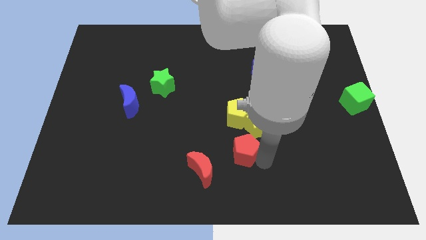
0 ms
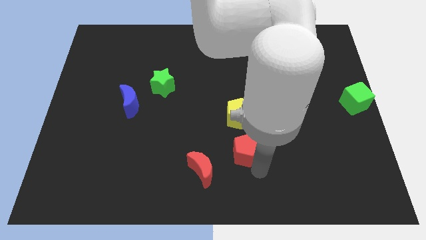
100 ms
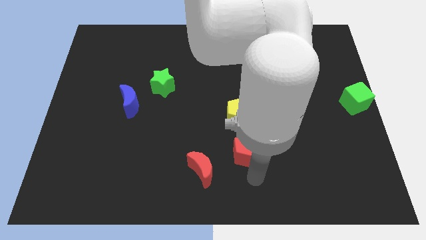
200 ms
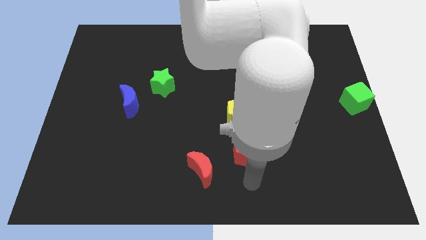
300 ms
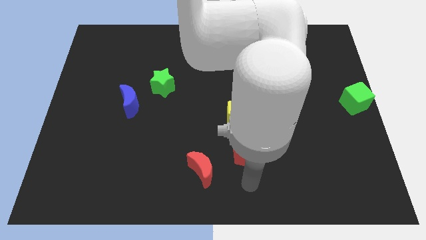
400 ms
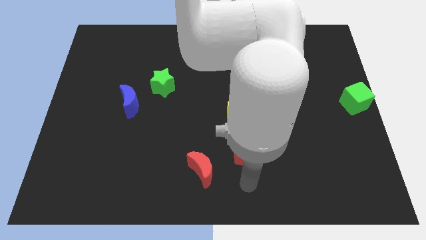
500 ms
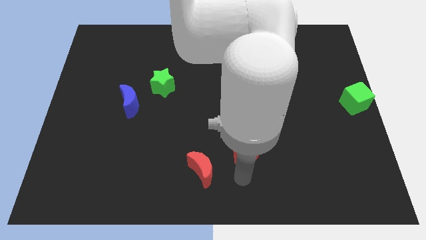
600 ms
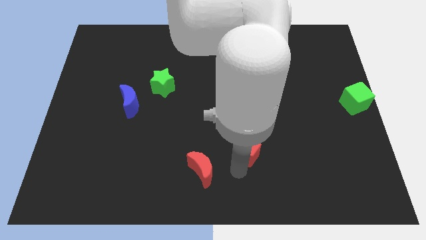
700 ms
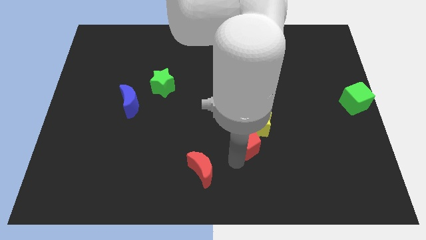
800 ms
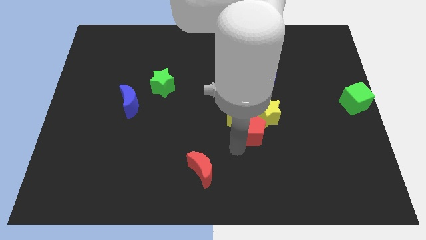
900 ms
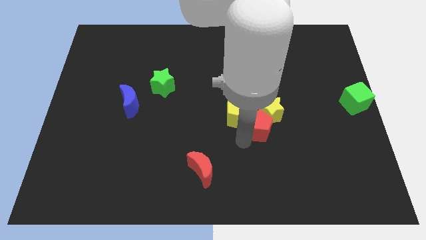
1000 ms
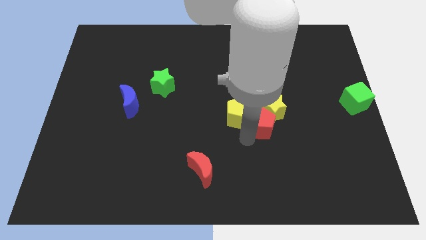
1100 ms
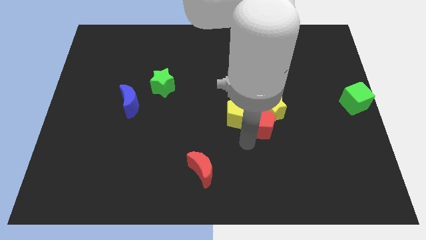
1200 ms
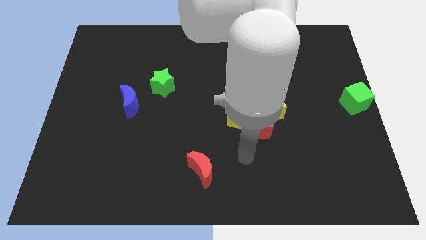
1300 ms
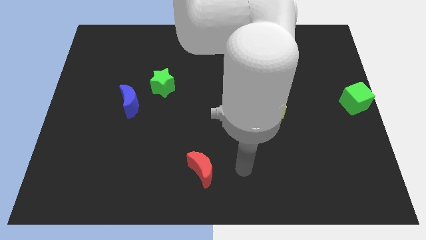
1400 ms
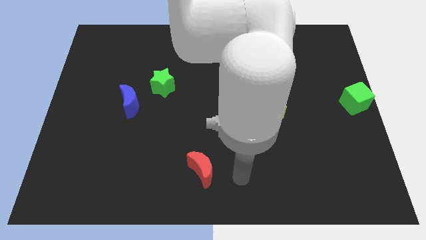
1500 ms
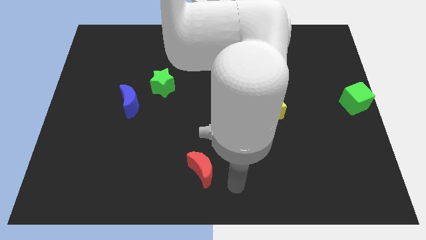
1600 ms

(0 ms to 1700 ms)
slide the red pentagon into the yellow star

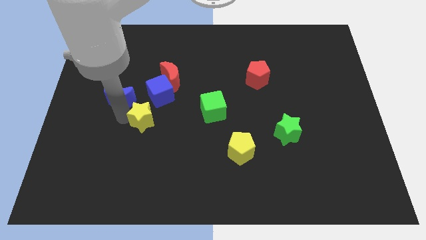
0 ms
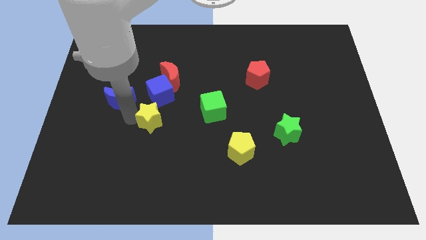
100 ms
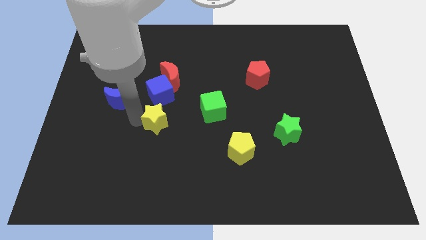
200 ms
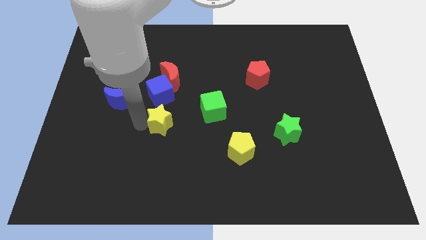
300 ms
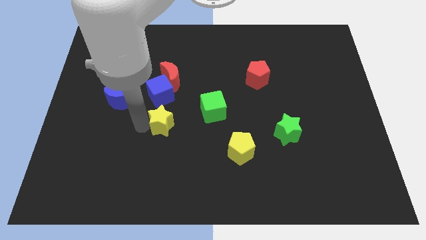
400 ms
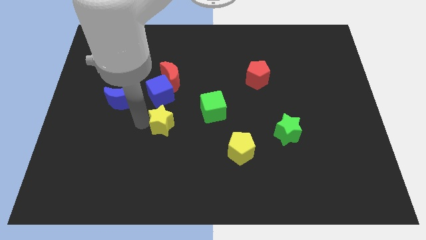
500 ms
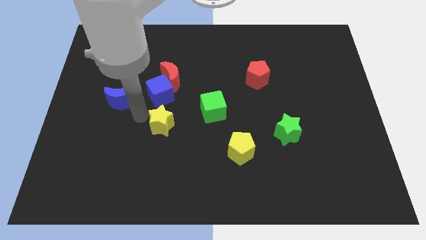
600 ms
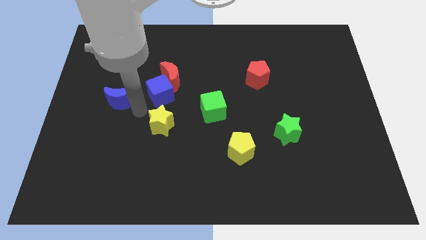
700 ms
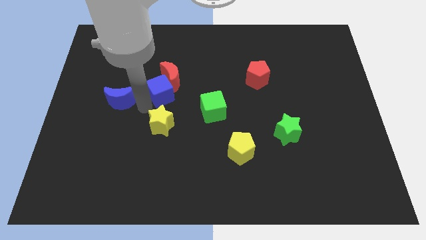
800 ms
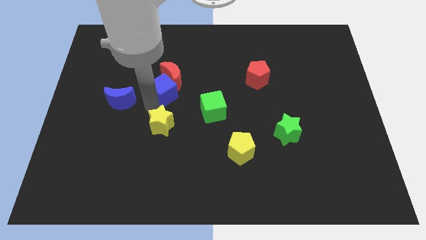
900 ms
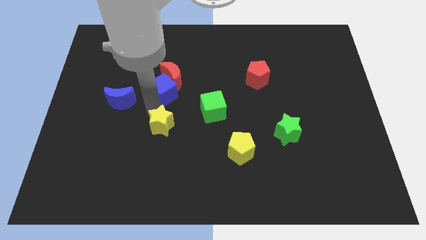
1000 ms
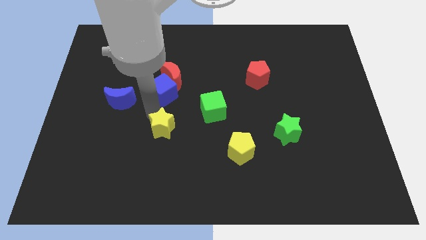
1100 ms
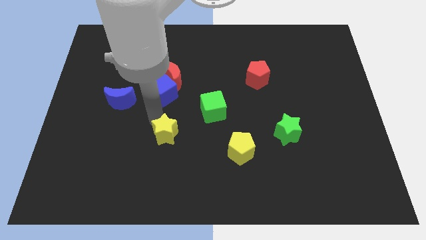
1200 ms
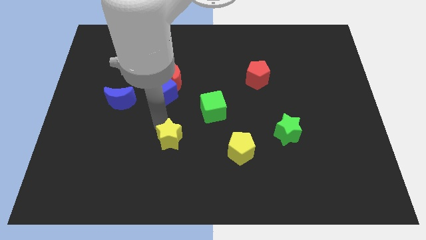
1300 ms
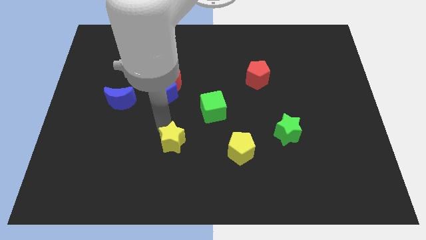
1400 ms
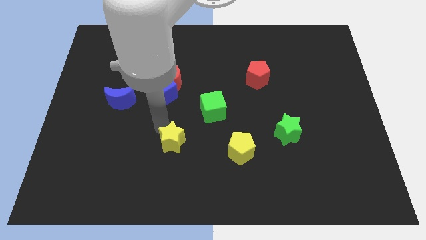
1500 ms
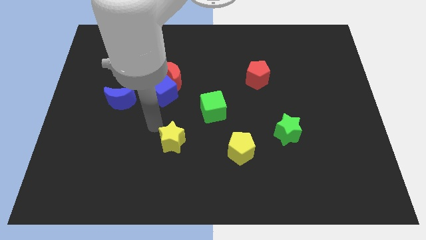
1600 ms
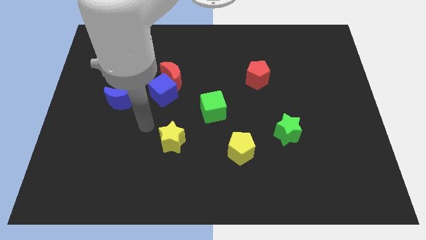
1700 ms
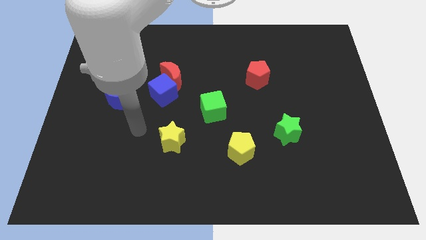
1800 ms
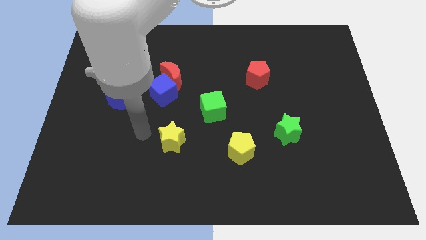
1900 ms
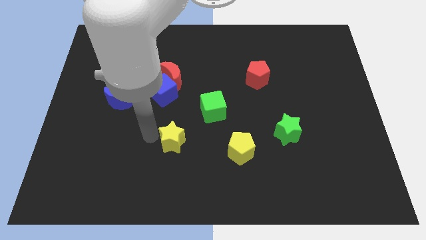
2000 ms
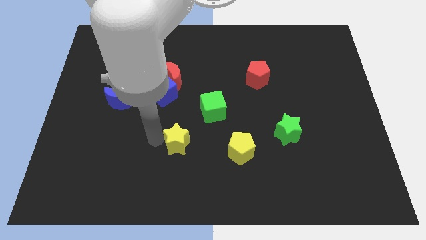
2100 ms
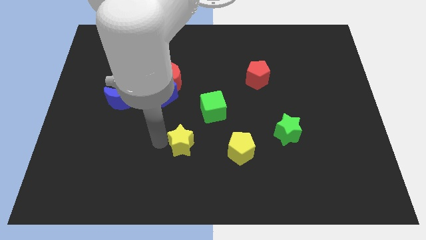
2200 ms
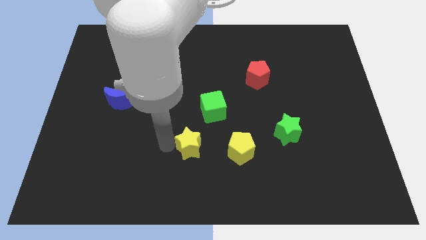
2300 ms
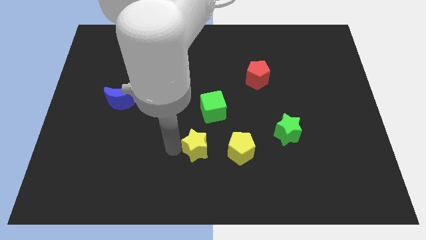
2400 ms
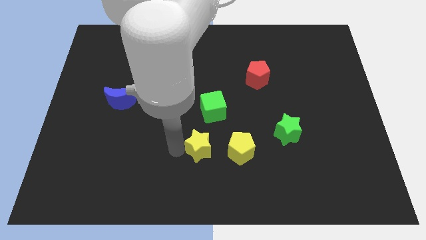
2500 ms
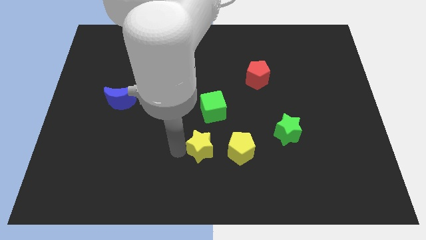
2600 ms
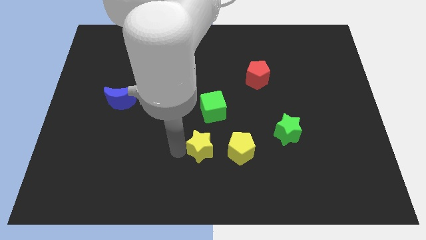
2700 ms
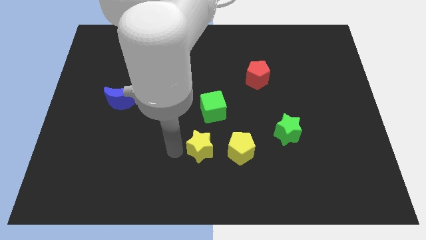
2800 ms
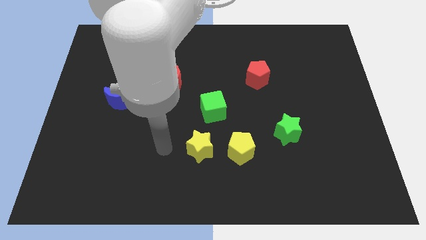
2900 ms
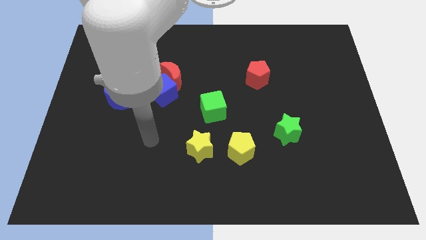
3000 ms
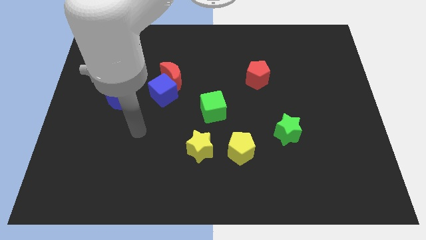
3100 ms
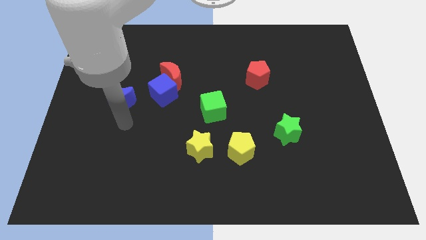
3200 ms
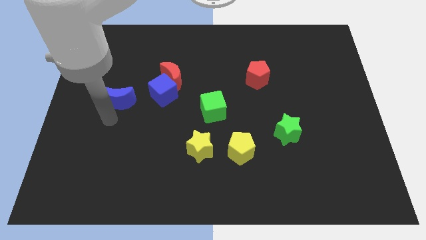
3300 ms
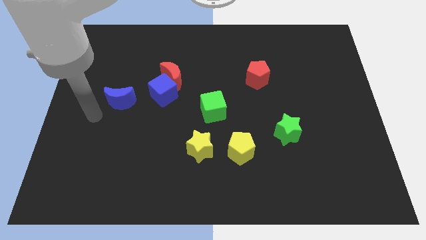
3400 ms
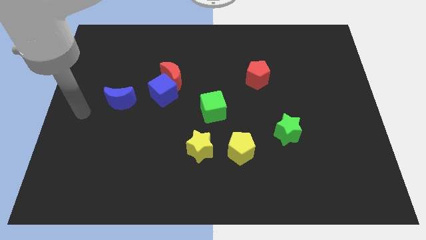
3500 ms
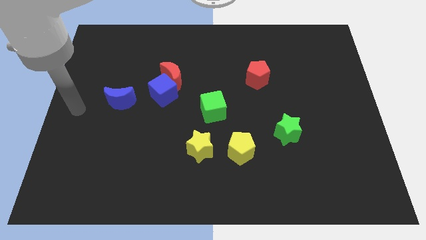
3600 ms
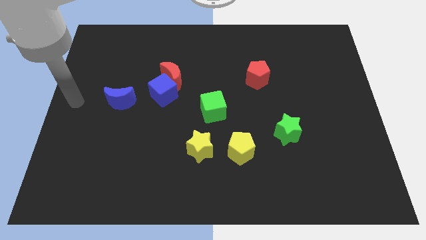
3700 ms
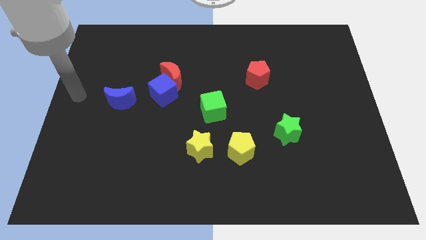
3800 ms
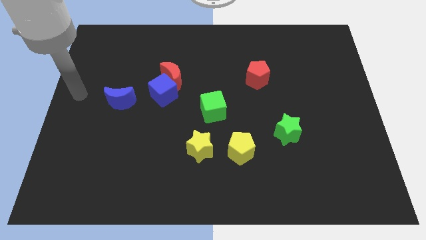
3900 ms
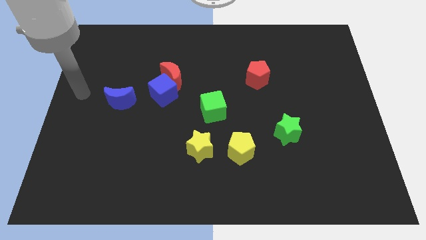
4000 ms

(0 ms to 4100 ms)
place the yellow star to the left of the yellow pentagon

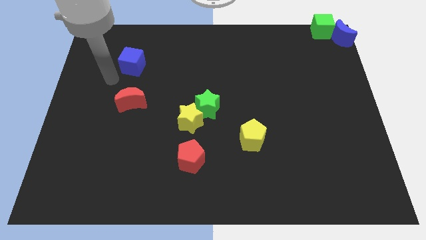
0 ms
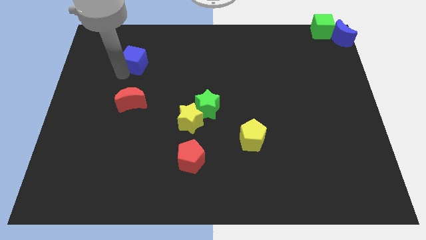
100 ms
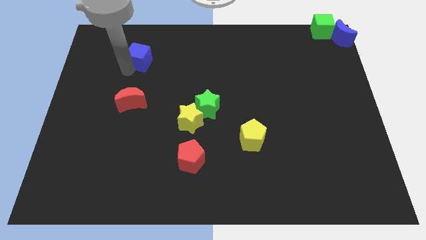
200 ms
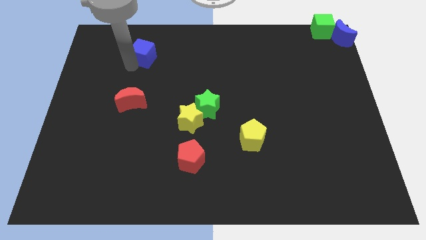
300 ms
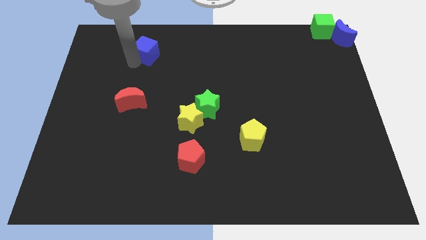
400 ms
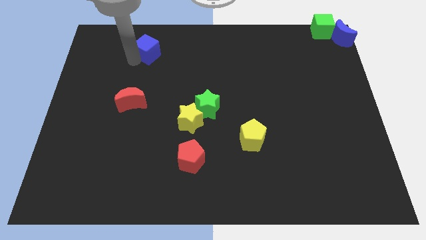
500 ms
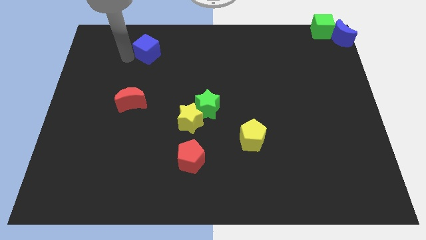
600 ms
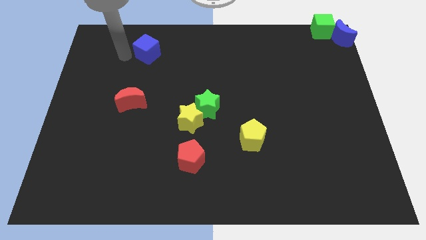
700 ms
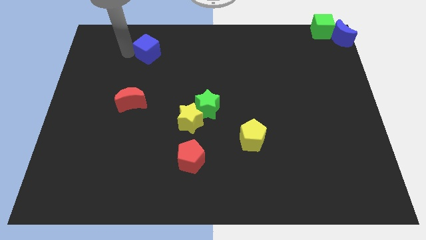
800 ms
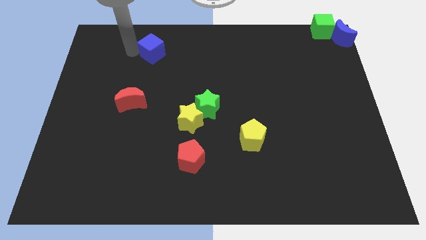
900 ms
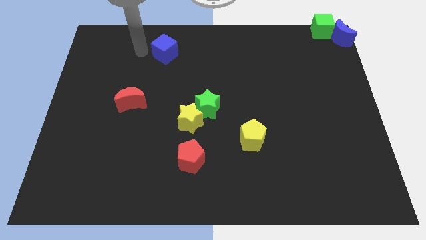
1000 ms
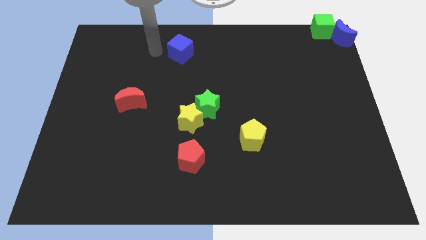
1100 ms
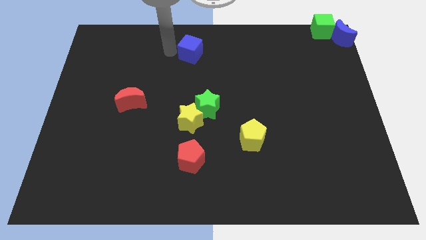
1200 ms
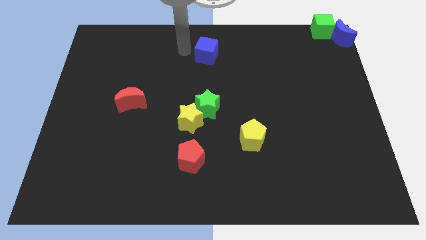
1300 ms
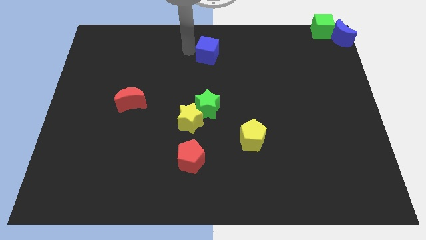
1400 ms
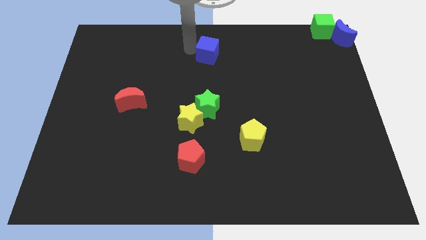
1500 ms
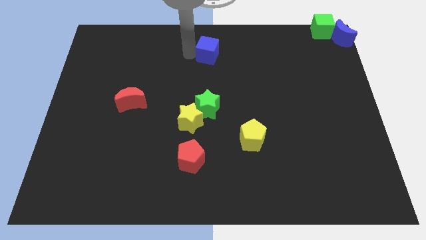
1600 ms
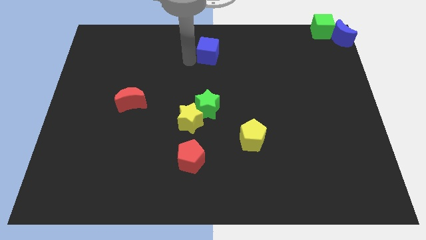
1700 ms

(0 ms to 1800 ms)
put the blue cube vertically above the green star

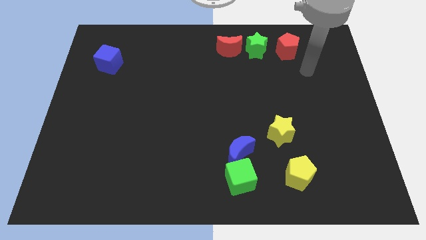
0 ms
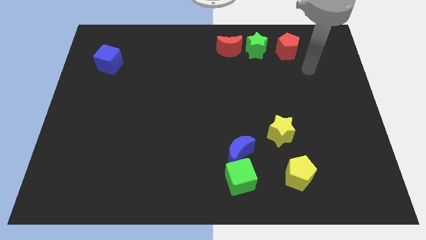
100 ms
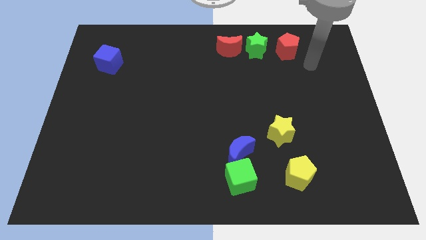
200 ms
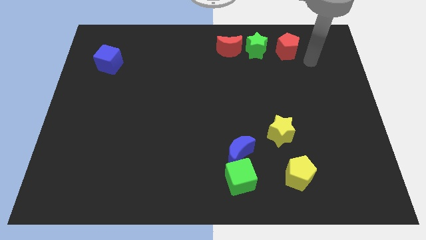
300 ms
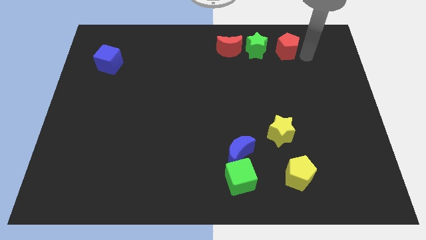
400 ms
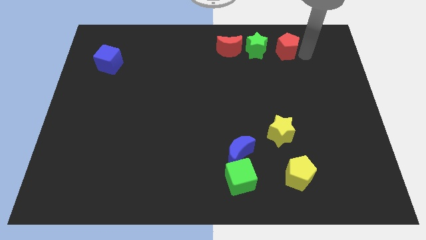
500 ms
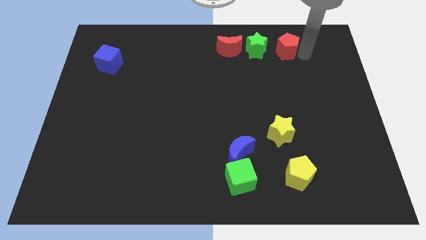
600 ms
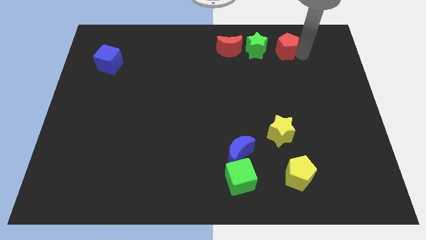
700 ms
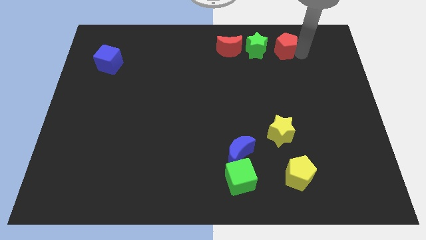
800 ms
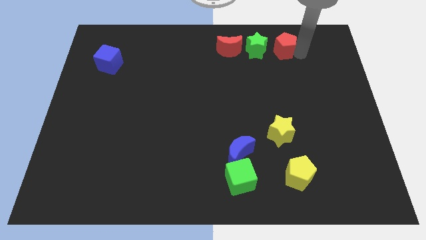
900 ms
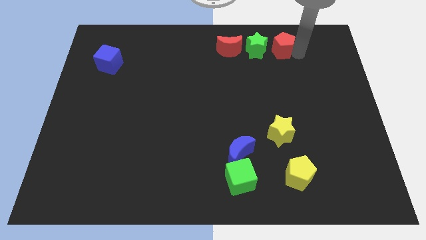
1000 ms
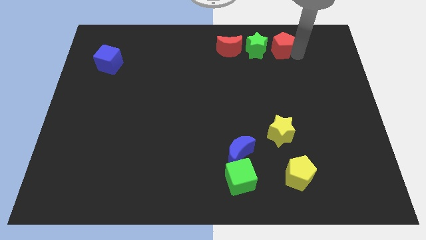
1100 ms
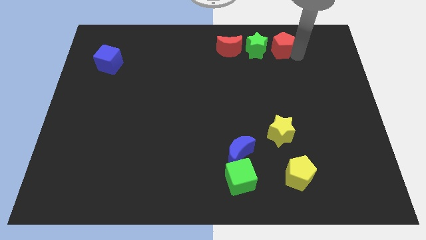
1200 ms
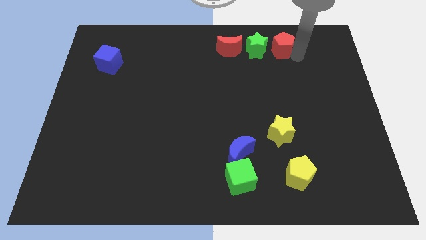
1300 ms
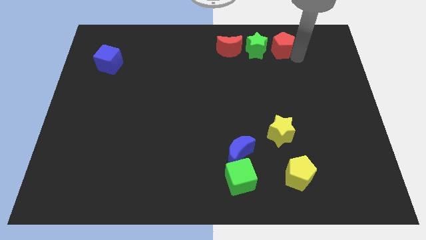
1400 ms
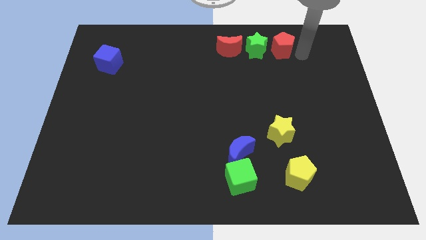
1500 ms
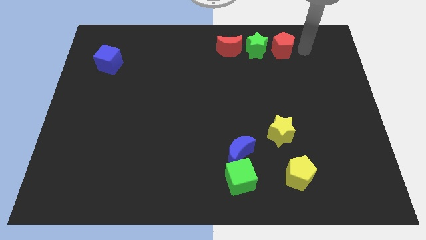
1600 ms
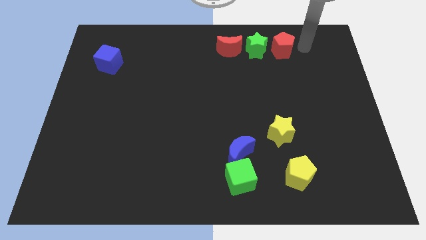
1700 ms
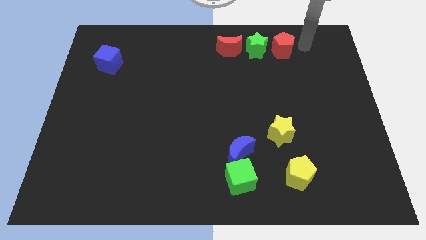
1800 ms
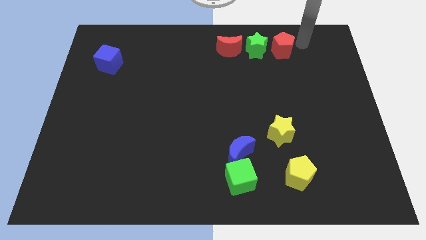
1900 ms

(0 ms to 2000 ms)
push red pentagon a bit more close to the green star
